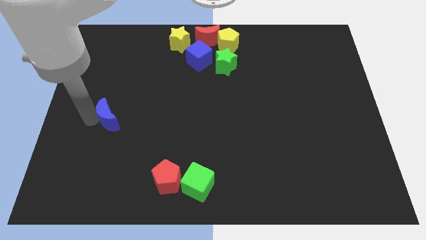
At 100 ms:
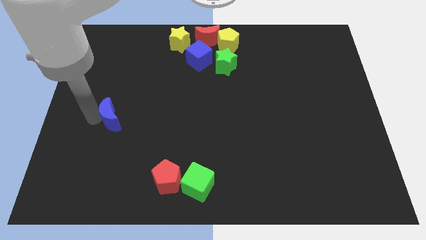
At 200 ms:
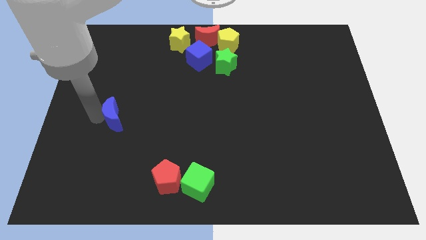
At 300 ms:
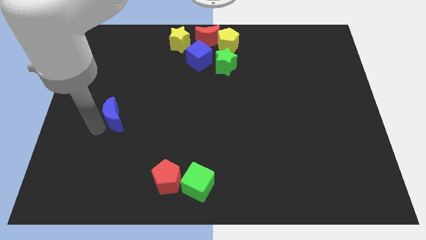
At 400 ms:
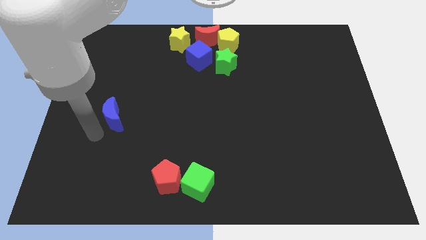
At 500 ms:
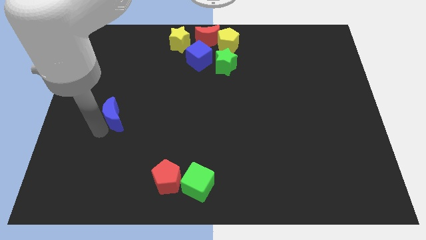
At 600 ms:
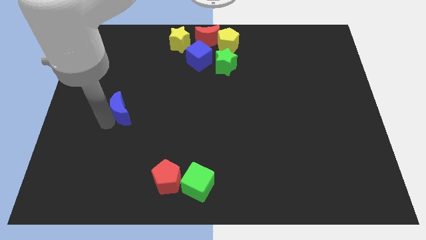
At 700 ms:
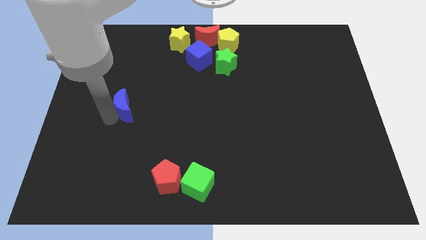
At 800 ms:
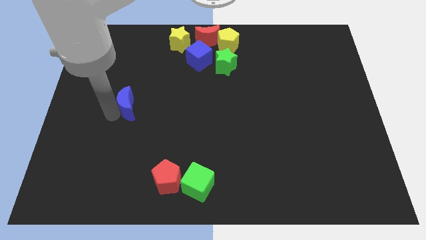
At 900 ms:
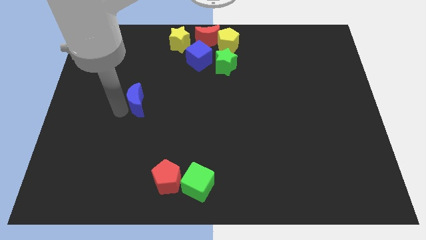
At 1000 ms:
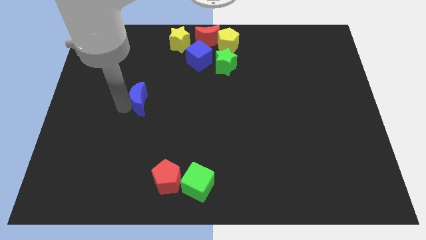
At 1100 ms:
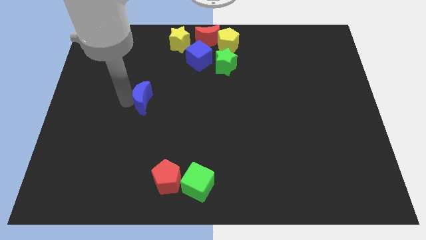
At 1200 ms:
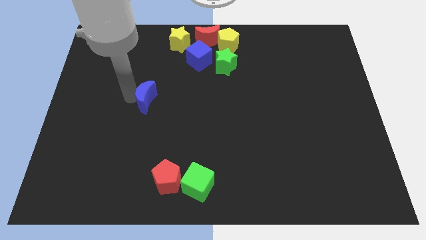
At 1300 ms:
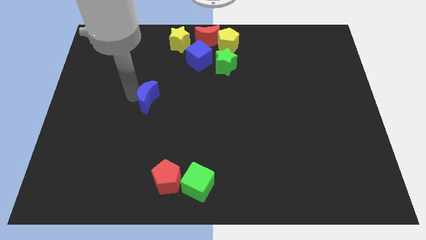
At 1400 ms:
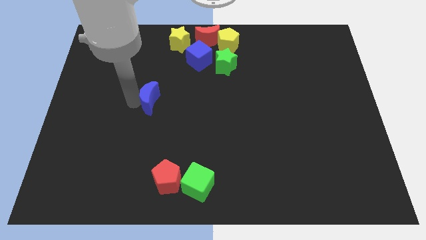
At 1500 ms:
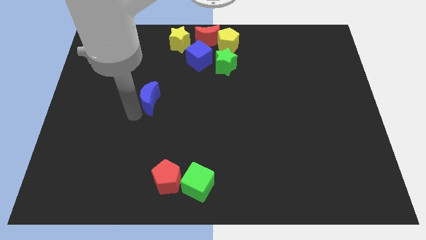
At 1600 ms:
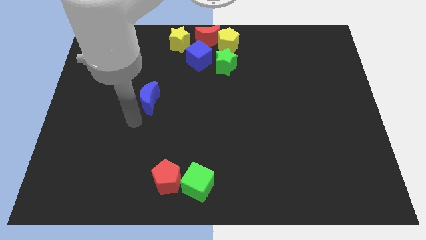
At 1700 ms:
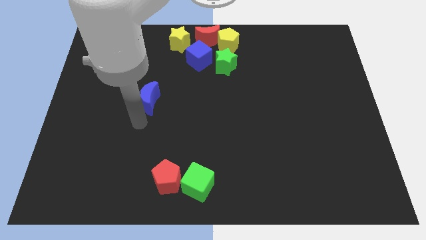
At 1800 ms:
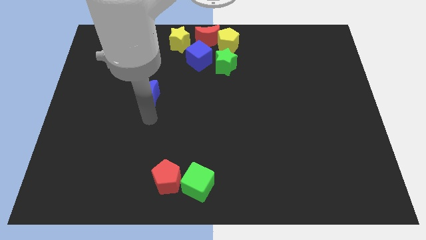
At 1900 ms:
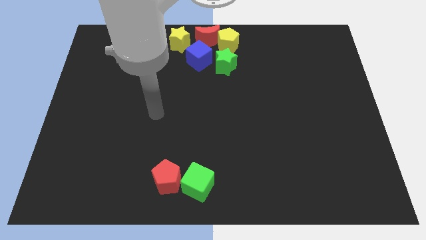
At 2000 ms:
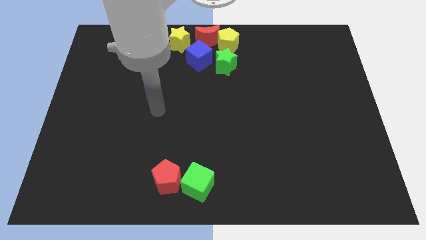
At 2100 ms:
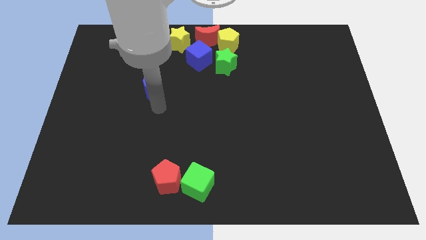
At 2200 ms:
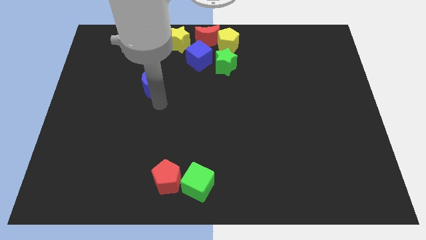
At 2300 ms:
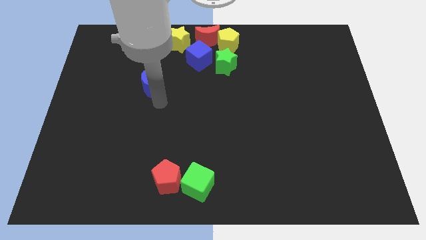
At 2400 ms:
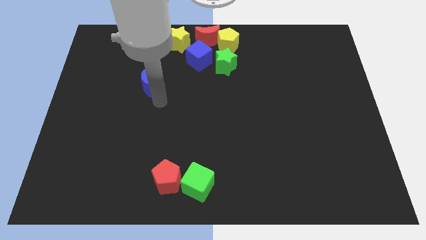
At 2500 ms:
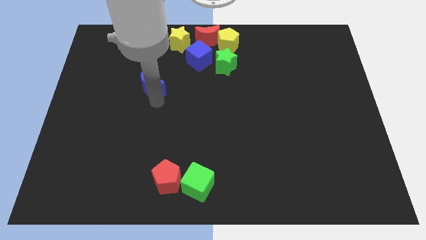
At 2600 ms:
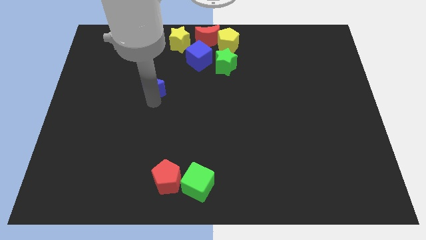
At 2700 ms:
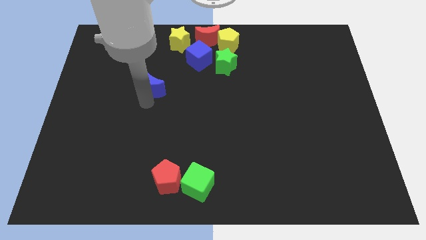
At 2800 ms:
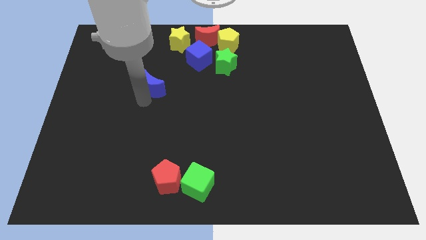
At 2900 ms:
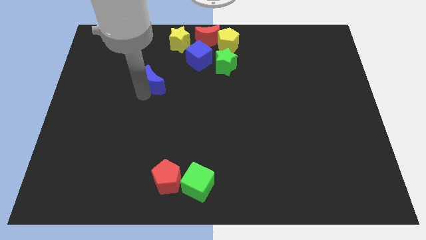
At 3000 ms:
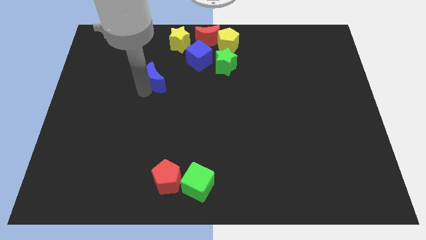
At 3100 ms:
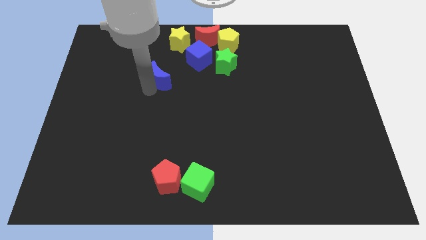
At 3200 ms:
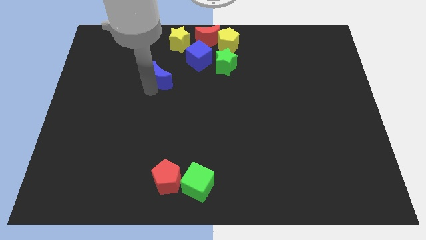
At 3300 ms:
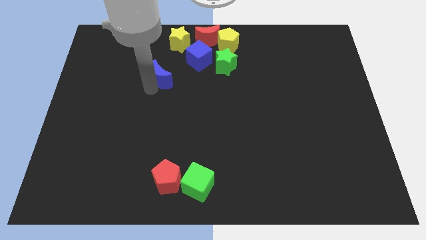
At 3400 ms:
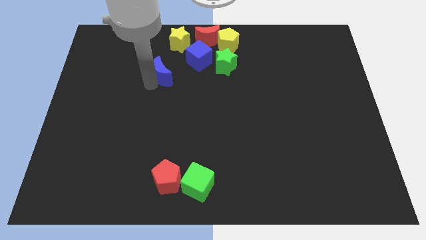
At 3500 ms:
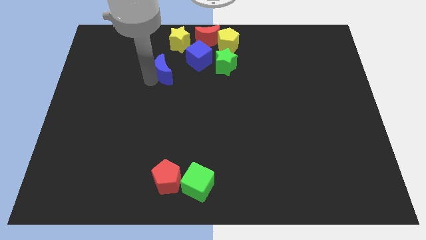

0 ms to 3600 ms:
move blue moon towards blue cube

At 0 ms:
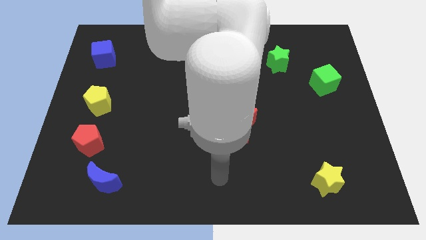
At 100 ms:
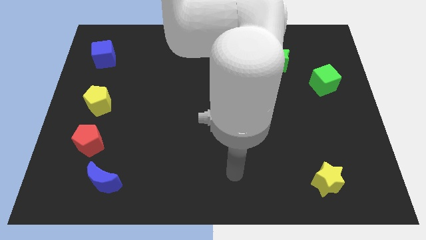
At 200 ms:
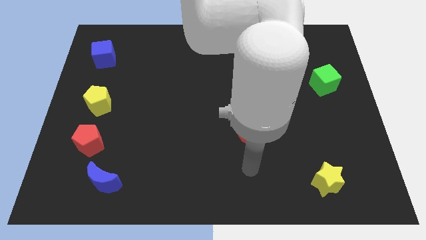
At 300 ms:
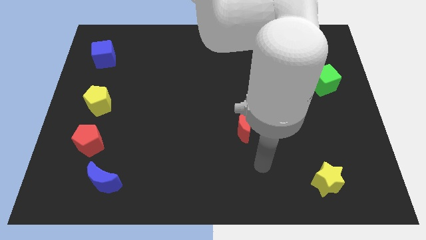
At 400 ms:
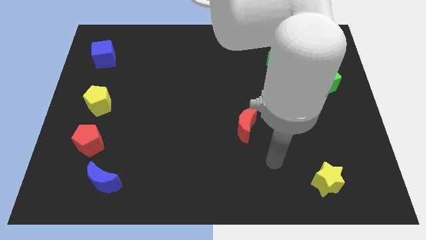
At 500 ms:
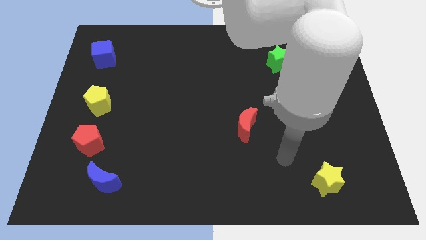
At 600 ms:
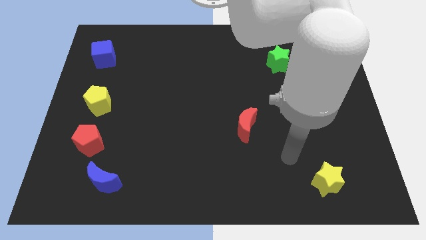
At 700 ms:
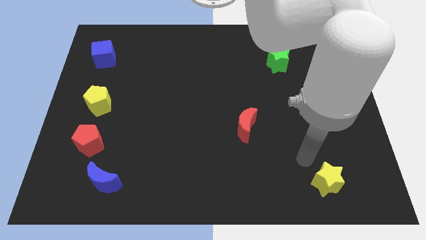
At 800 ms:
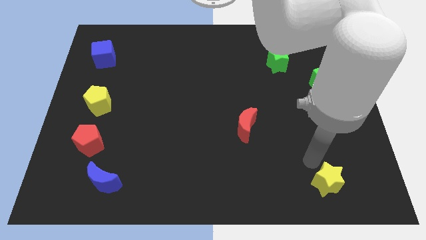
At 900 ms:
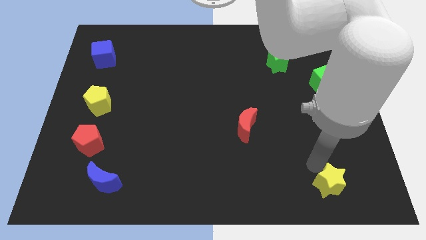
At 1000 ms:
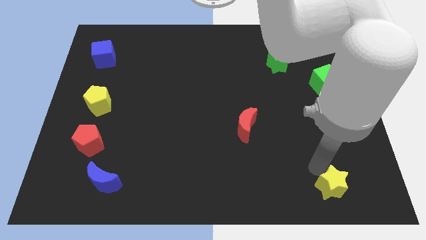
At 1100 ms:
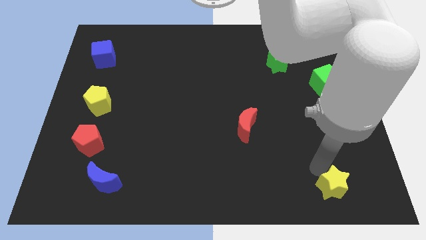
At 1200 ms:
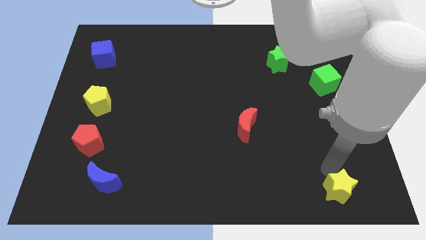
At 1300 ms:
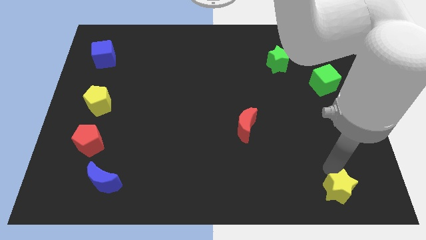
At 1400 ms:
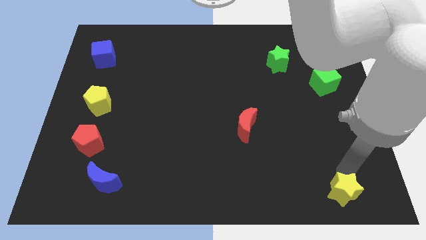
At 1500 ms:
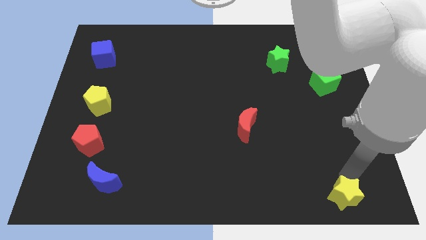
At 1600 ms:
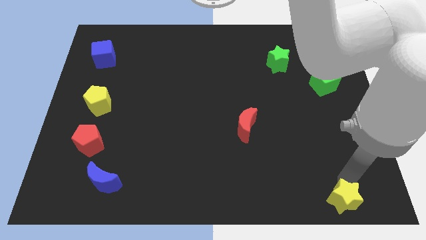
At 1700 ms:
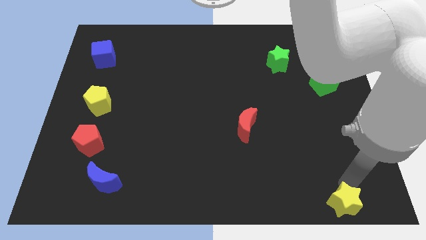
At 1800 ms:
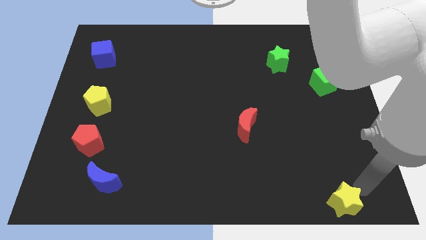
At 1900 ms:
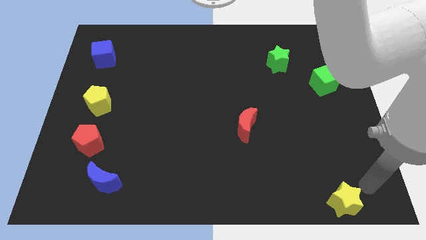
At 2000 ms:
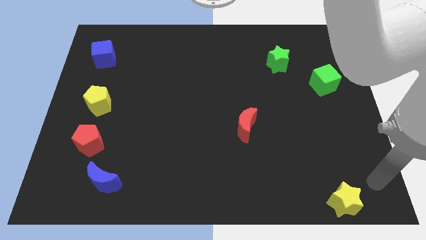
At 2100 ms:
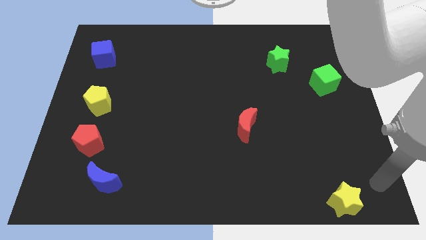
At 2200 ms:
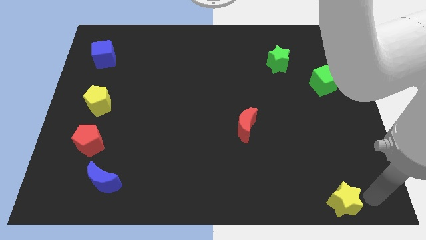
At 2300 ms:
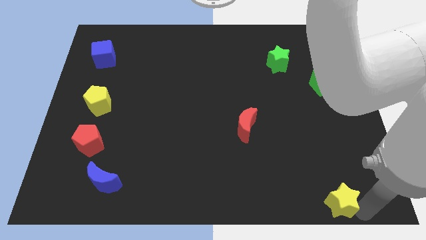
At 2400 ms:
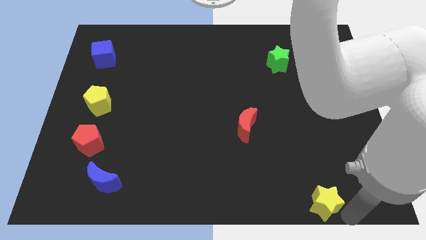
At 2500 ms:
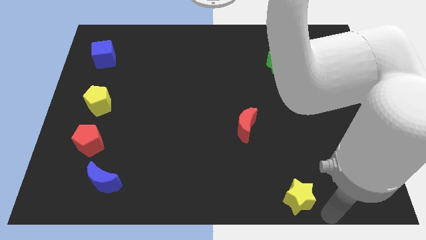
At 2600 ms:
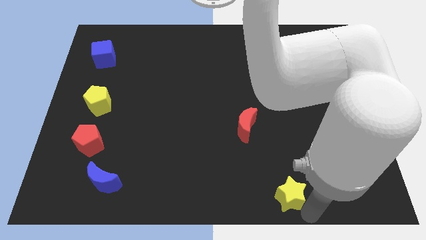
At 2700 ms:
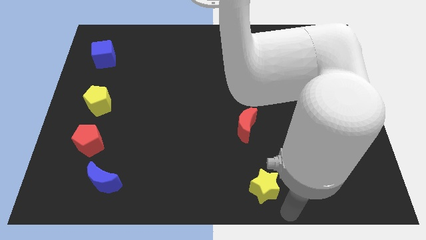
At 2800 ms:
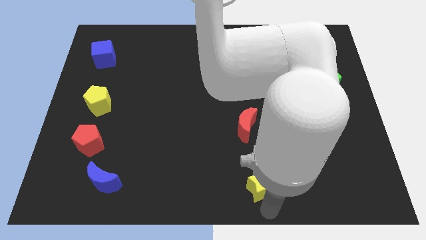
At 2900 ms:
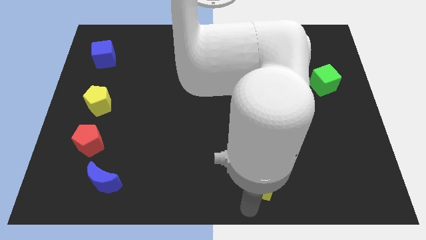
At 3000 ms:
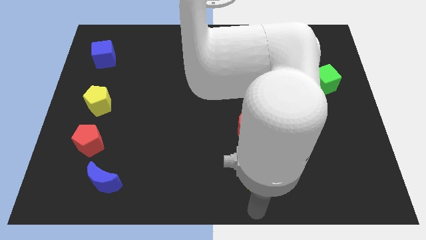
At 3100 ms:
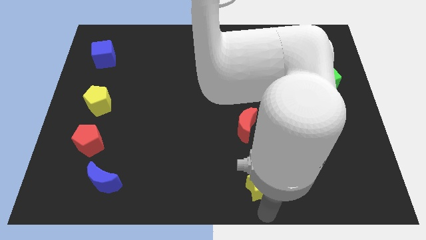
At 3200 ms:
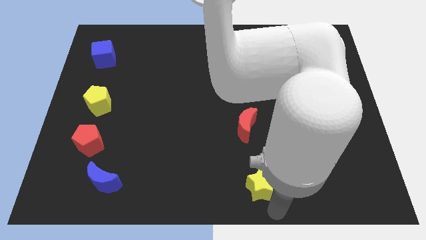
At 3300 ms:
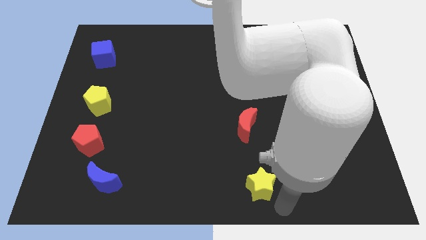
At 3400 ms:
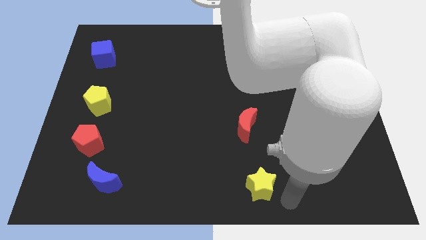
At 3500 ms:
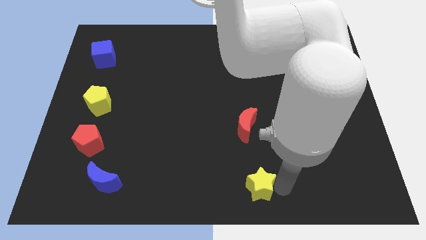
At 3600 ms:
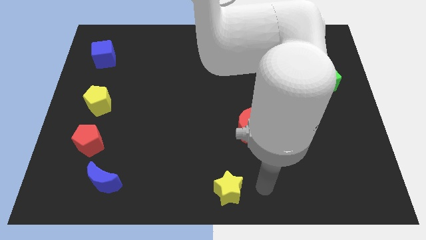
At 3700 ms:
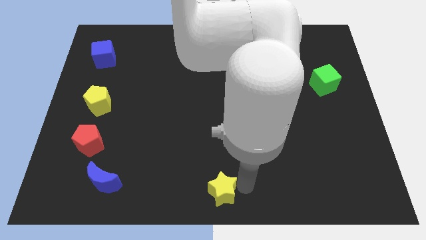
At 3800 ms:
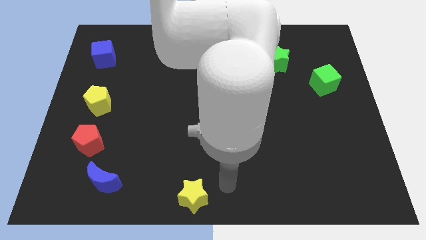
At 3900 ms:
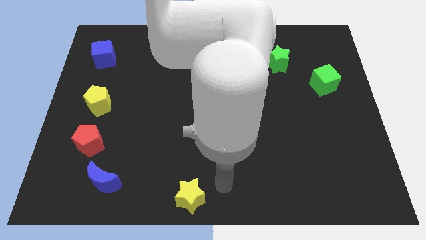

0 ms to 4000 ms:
place the yellow star at the bottom center of the board

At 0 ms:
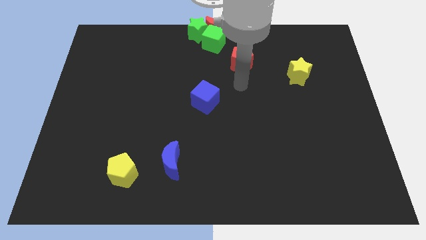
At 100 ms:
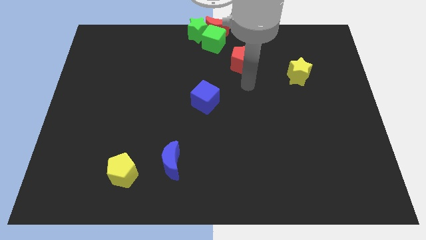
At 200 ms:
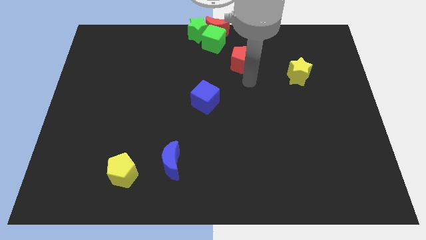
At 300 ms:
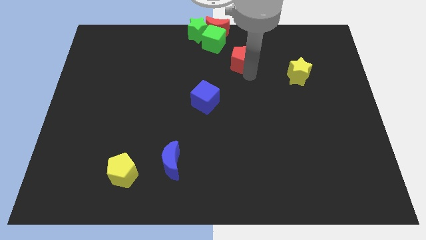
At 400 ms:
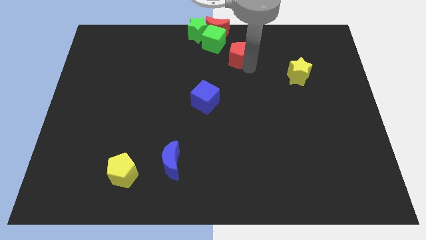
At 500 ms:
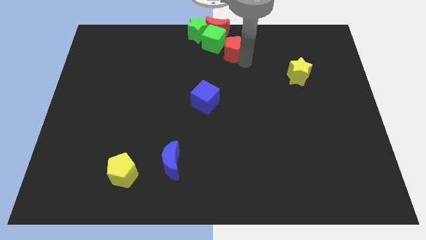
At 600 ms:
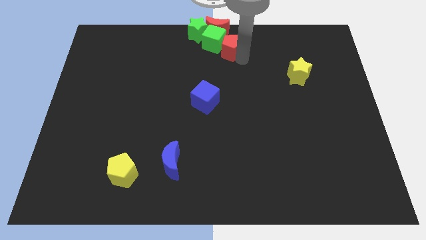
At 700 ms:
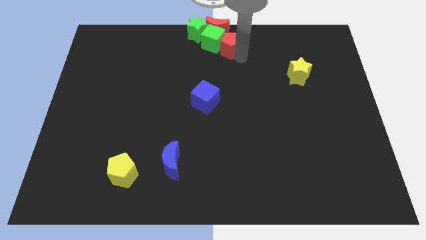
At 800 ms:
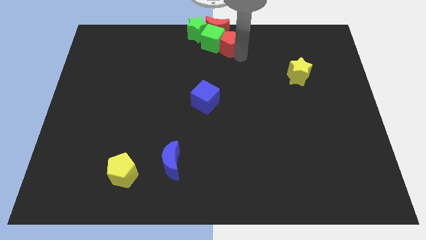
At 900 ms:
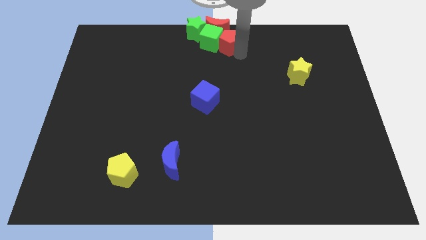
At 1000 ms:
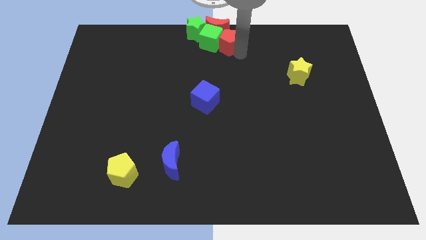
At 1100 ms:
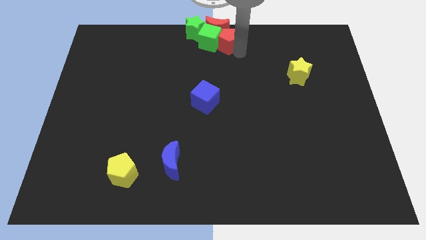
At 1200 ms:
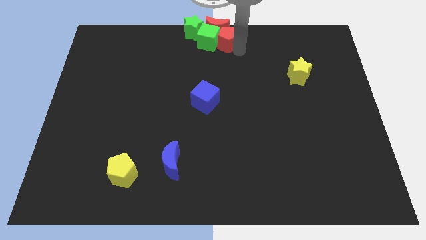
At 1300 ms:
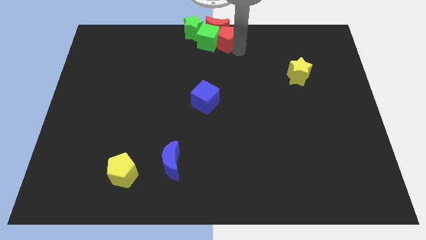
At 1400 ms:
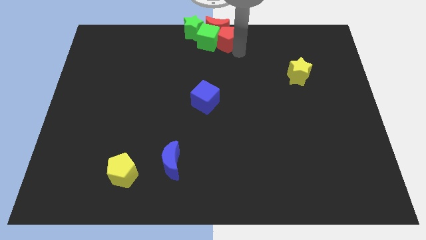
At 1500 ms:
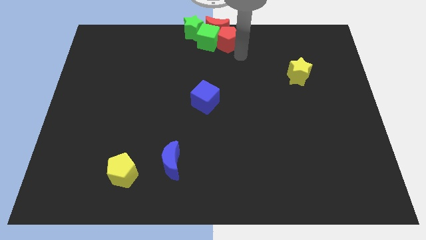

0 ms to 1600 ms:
take the red pentagon into the group of blocks
